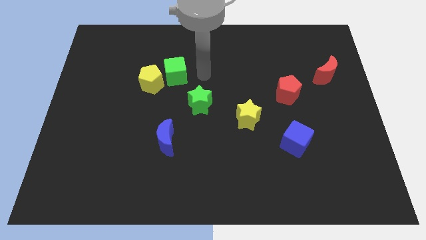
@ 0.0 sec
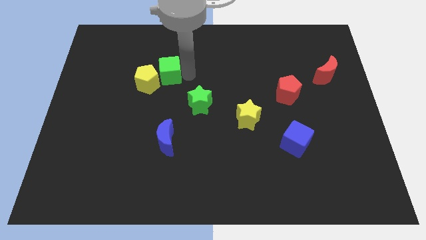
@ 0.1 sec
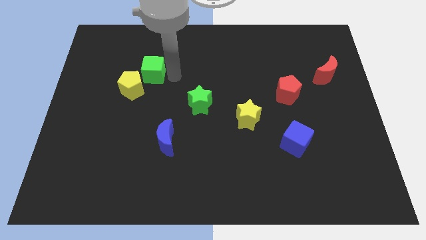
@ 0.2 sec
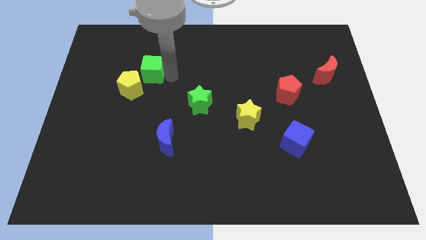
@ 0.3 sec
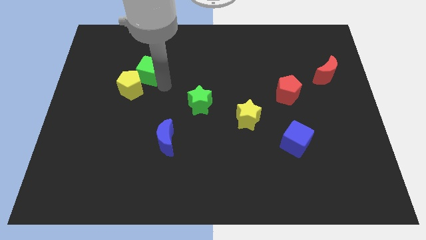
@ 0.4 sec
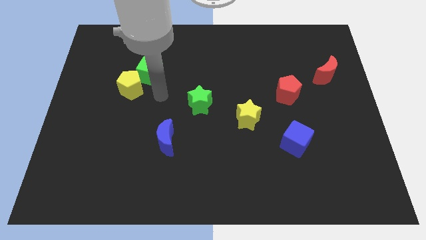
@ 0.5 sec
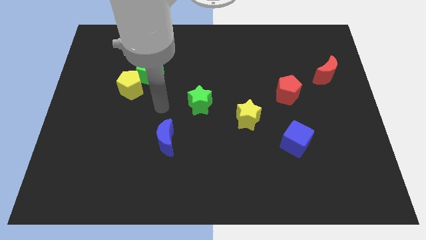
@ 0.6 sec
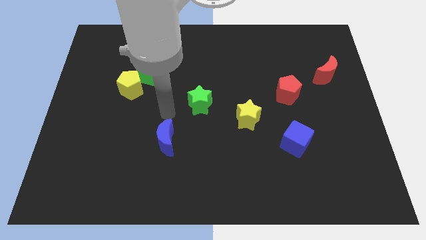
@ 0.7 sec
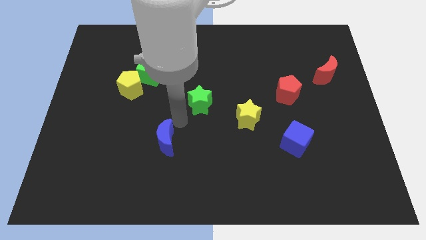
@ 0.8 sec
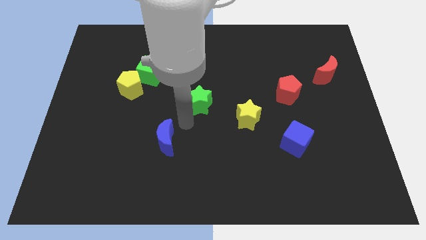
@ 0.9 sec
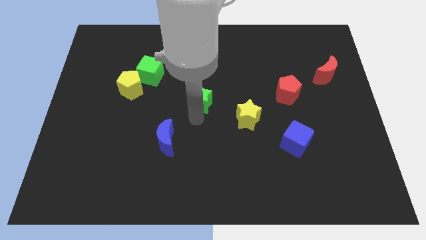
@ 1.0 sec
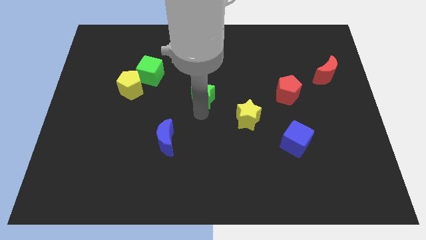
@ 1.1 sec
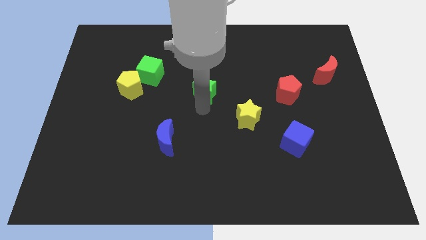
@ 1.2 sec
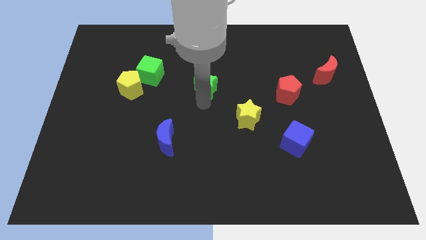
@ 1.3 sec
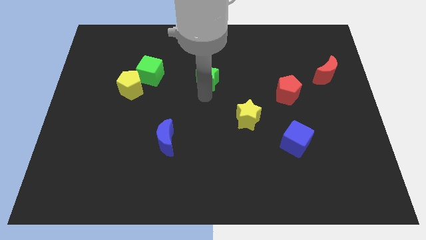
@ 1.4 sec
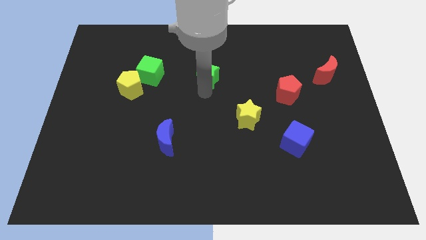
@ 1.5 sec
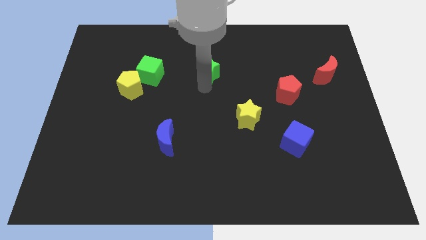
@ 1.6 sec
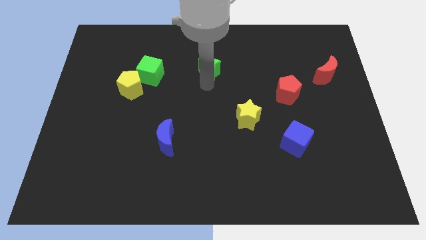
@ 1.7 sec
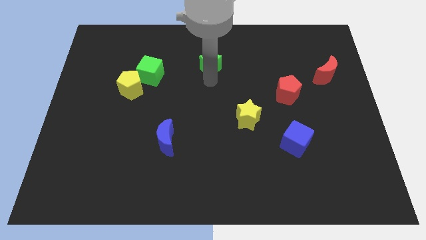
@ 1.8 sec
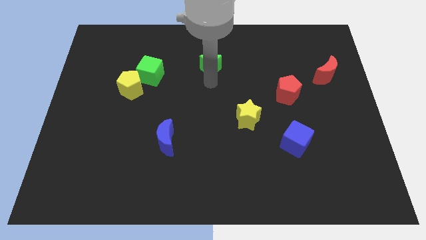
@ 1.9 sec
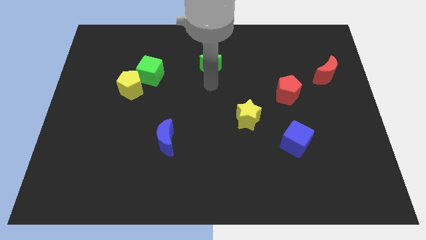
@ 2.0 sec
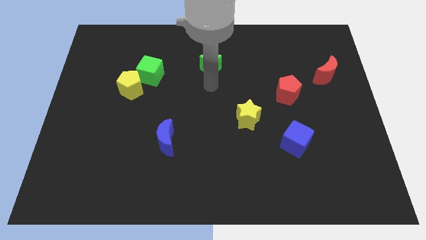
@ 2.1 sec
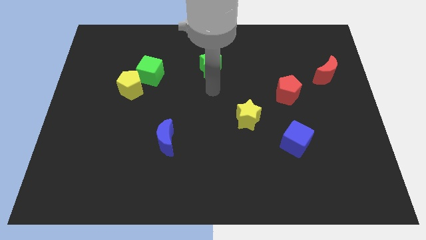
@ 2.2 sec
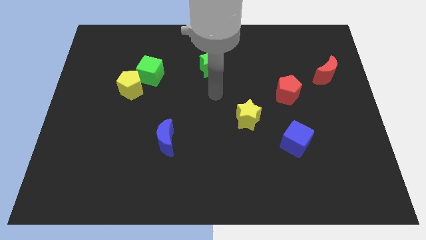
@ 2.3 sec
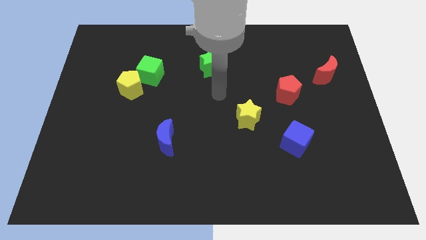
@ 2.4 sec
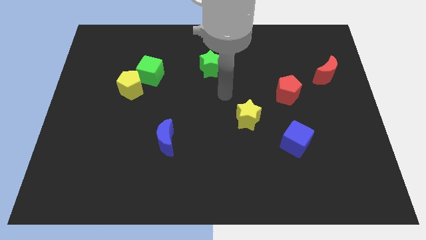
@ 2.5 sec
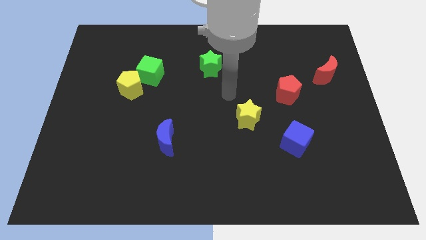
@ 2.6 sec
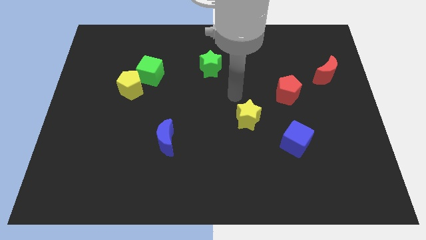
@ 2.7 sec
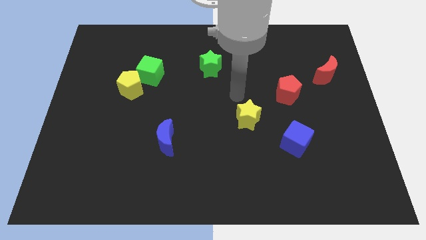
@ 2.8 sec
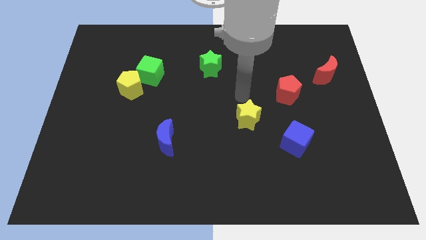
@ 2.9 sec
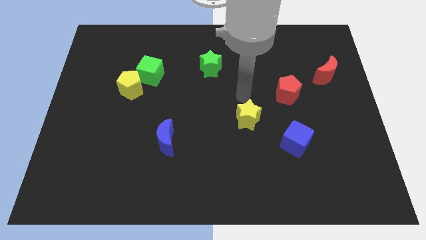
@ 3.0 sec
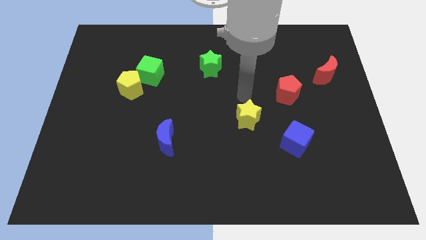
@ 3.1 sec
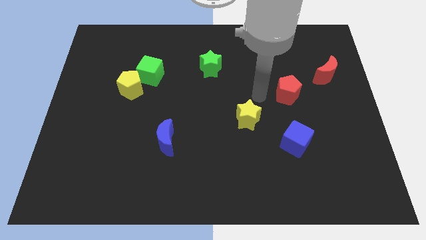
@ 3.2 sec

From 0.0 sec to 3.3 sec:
push the green star slightly towards up

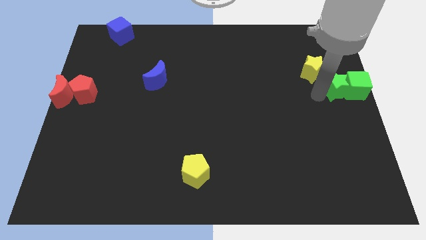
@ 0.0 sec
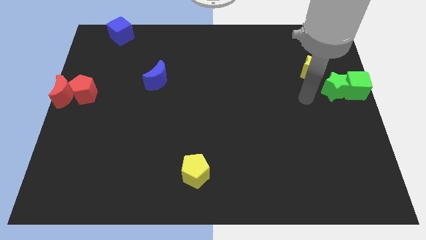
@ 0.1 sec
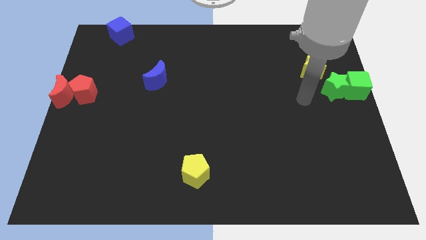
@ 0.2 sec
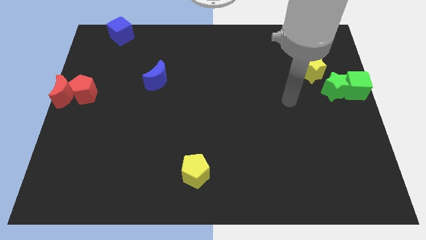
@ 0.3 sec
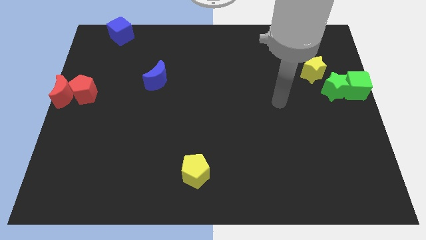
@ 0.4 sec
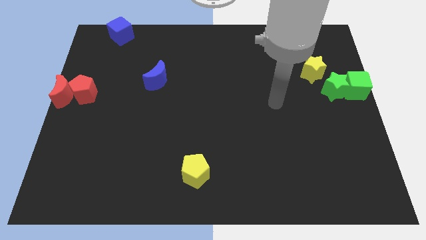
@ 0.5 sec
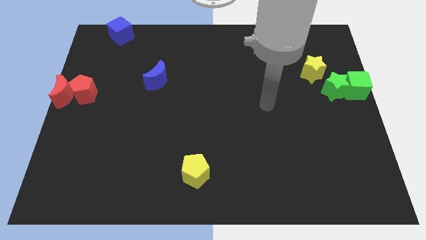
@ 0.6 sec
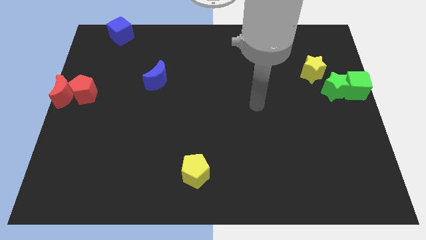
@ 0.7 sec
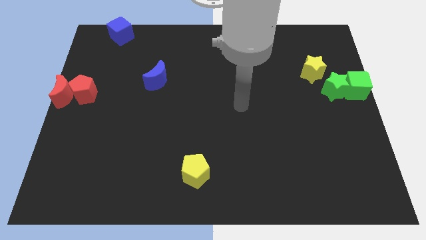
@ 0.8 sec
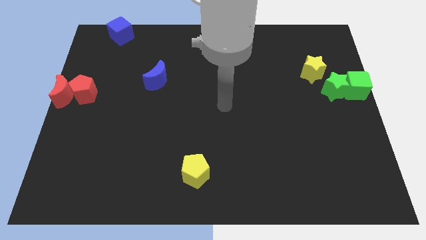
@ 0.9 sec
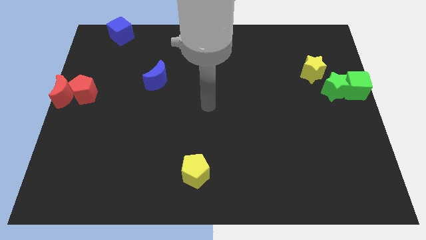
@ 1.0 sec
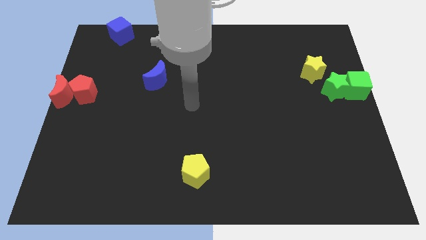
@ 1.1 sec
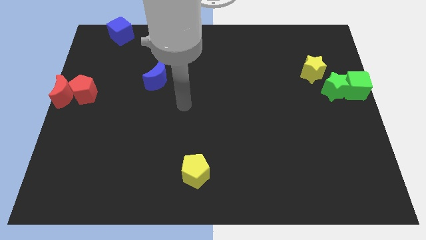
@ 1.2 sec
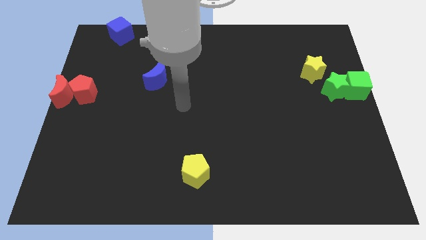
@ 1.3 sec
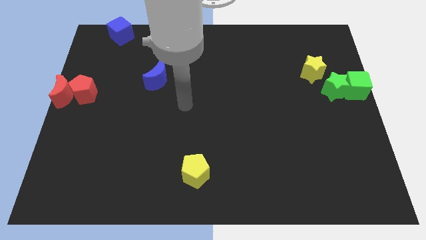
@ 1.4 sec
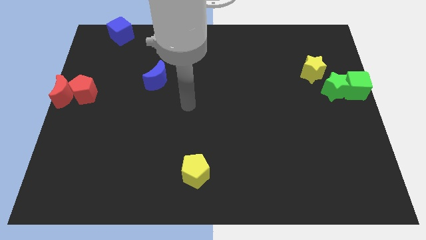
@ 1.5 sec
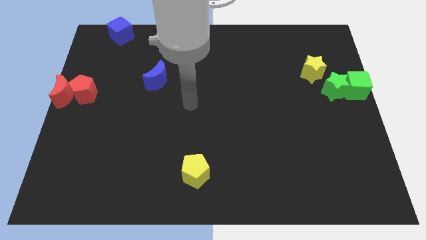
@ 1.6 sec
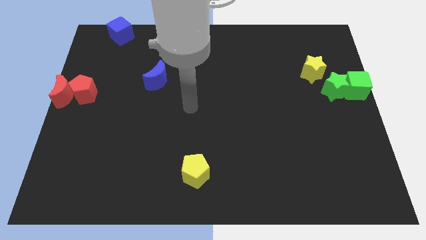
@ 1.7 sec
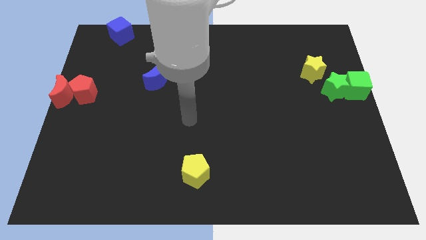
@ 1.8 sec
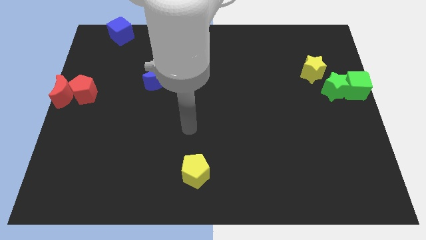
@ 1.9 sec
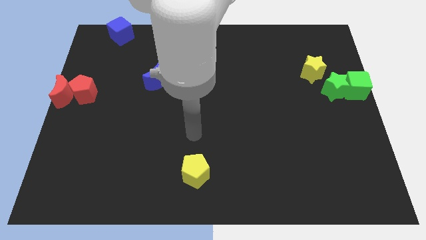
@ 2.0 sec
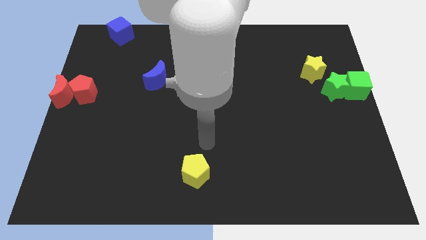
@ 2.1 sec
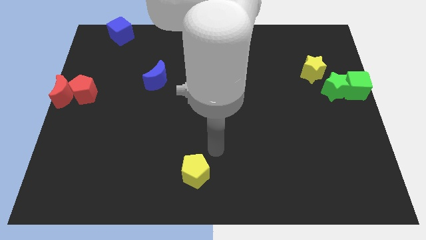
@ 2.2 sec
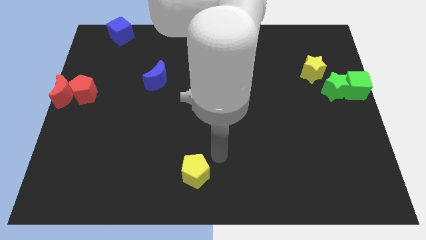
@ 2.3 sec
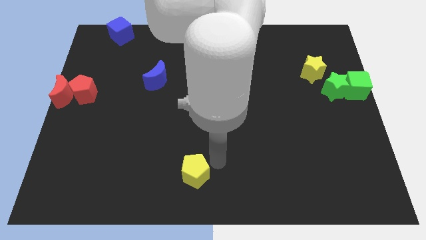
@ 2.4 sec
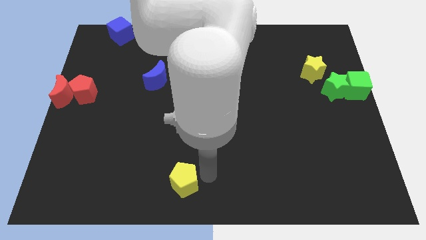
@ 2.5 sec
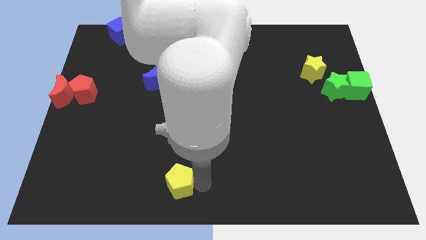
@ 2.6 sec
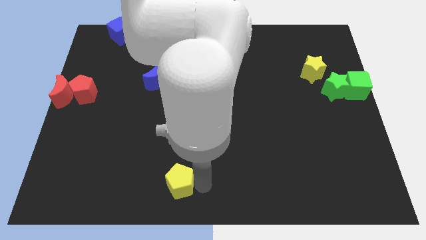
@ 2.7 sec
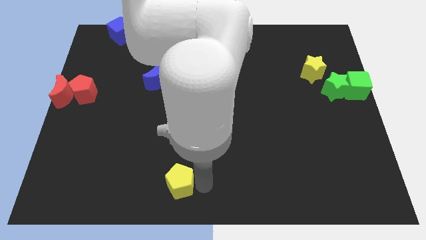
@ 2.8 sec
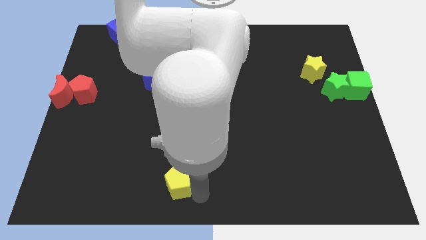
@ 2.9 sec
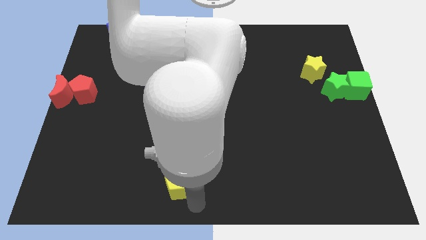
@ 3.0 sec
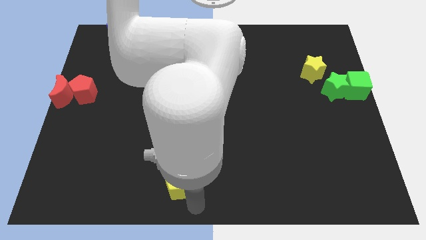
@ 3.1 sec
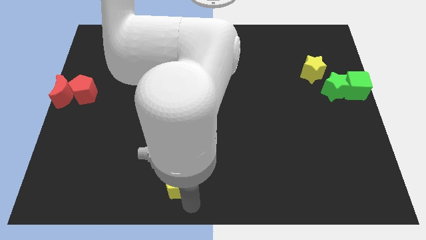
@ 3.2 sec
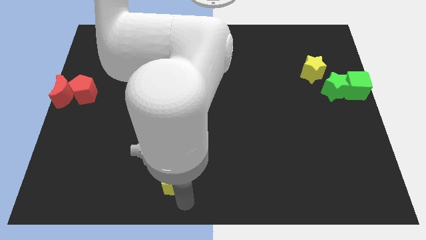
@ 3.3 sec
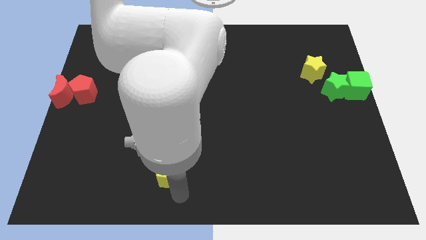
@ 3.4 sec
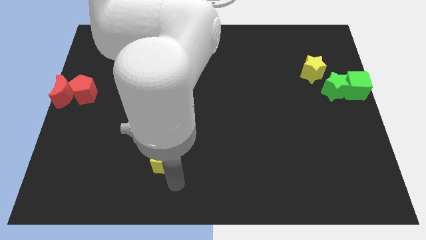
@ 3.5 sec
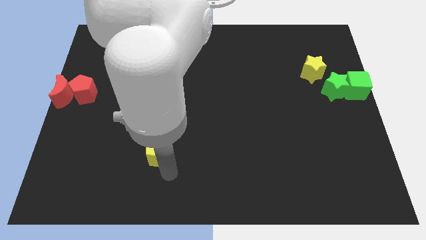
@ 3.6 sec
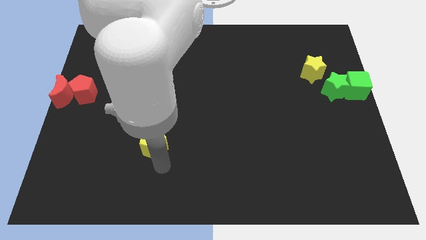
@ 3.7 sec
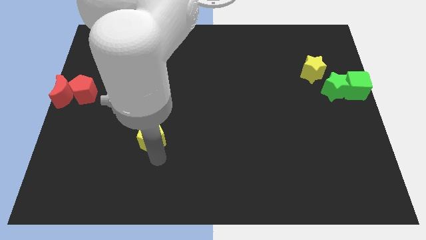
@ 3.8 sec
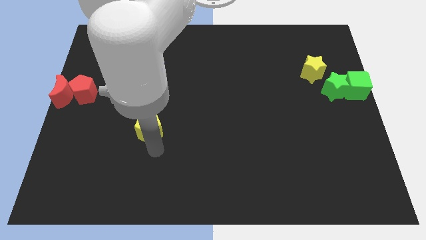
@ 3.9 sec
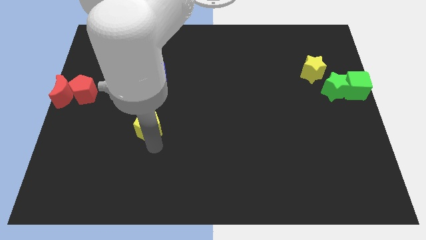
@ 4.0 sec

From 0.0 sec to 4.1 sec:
move your arm away from the green star

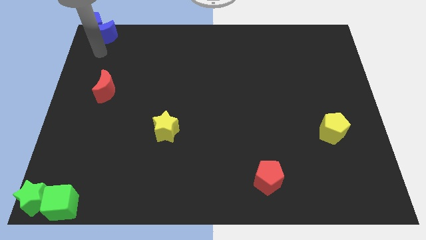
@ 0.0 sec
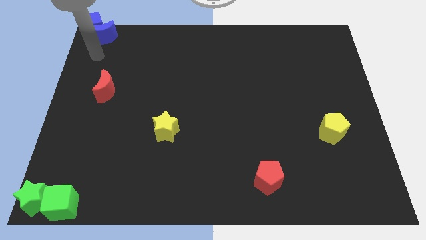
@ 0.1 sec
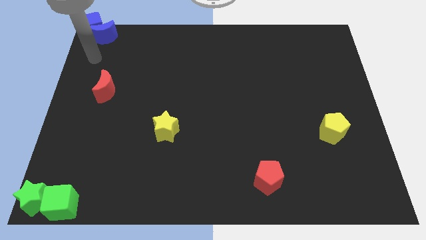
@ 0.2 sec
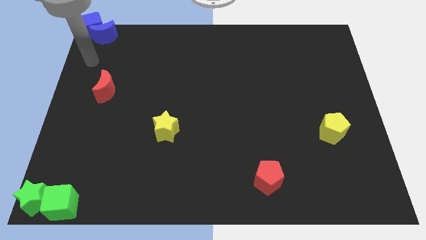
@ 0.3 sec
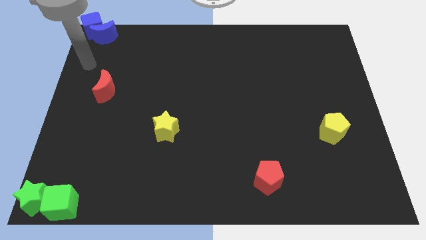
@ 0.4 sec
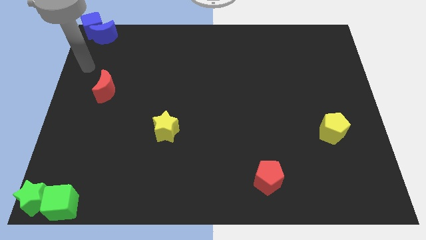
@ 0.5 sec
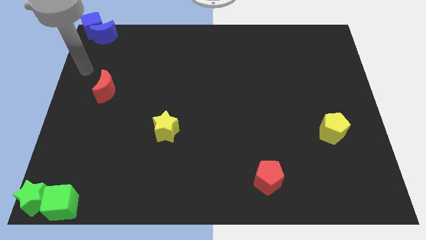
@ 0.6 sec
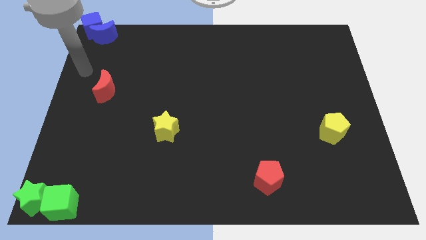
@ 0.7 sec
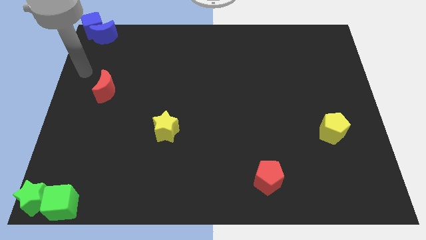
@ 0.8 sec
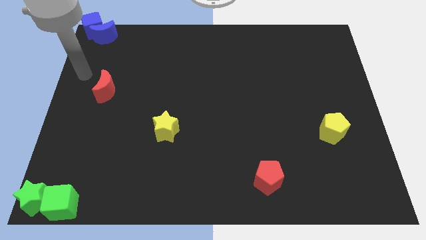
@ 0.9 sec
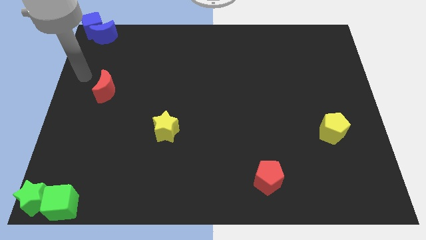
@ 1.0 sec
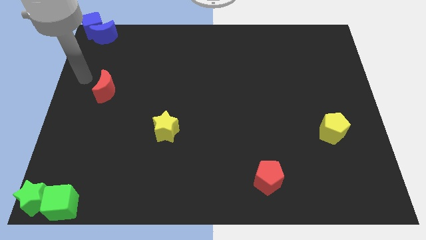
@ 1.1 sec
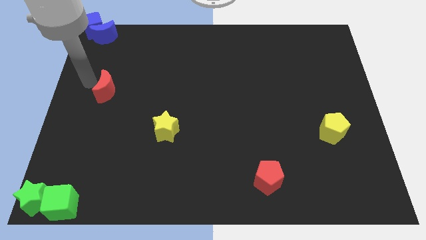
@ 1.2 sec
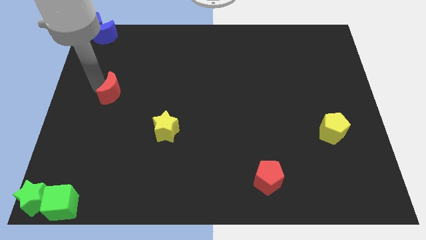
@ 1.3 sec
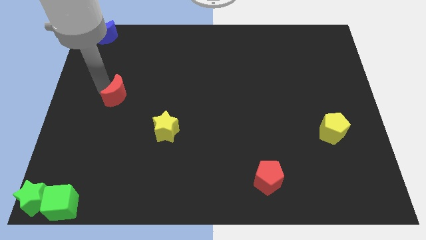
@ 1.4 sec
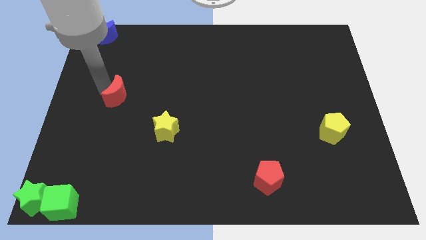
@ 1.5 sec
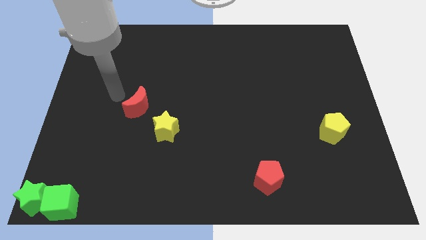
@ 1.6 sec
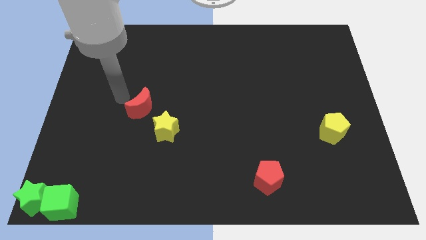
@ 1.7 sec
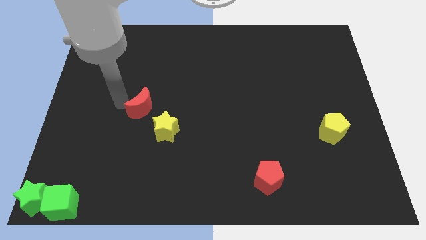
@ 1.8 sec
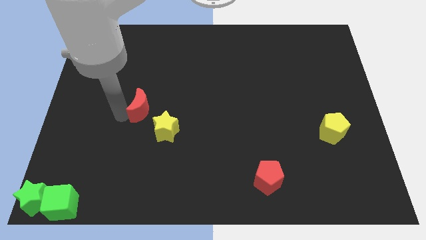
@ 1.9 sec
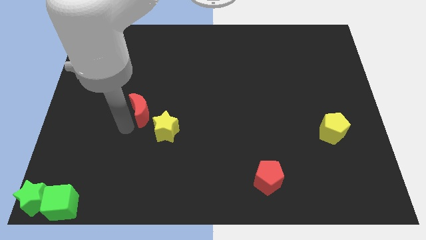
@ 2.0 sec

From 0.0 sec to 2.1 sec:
push the red moon close to the yellow star
